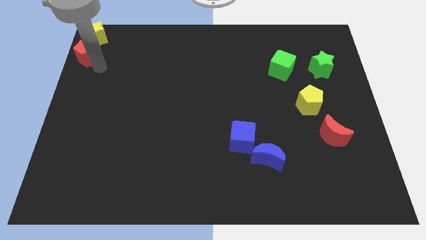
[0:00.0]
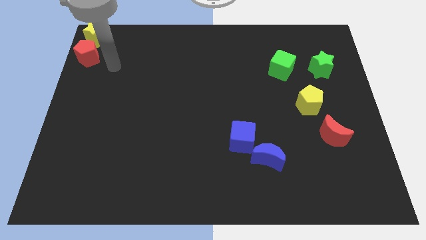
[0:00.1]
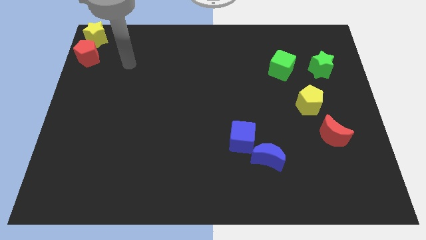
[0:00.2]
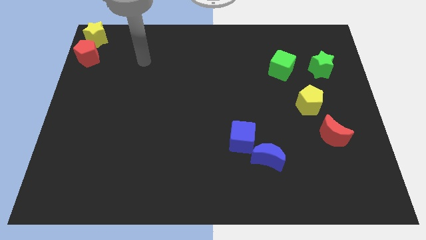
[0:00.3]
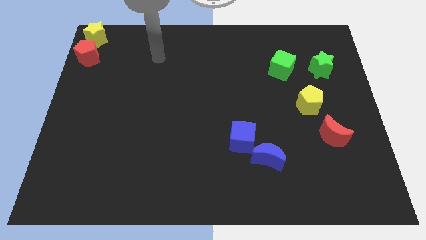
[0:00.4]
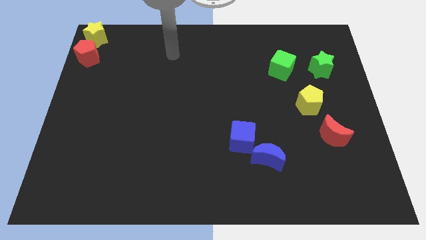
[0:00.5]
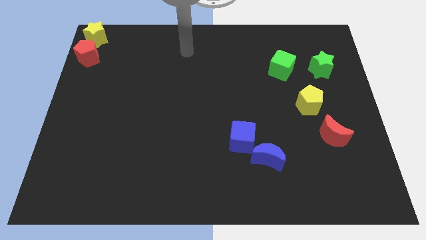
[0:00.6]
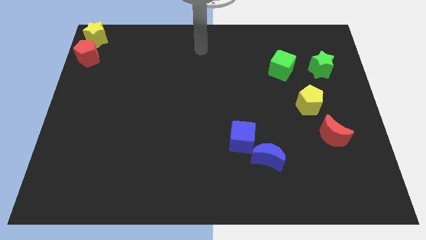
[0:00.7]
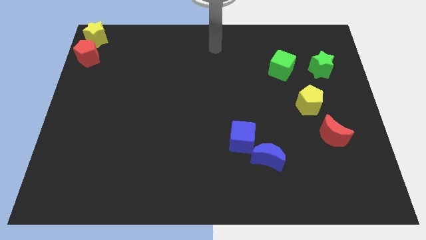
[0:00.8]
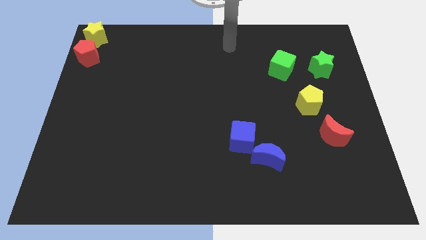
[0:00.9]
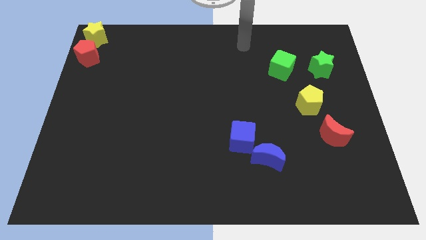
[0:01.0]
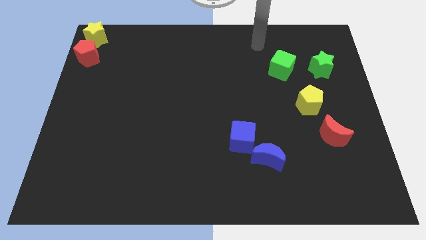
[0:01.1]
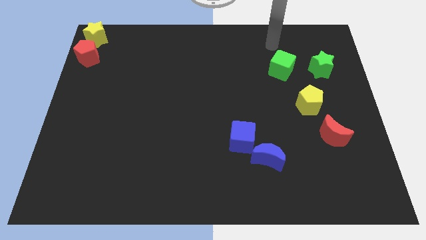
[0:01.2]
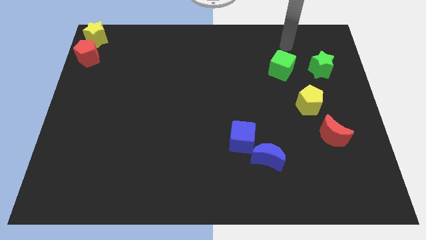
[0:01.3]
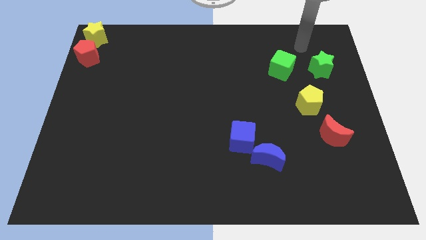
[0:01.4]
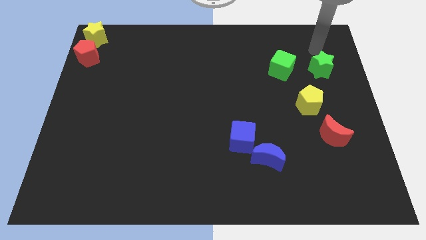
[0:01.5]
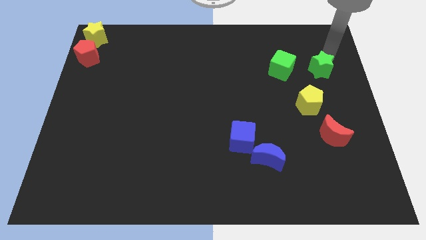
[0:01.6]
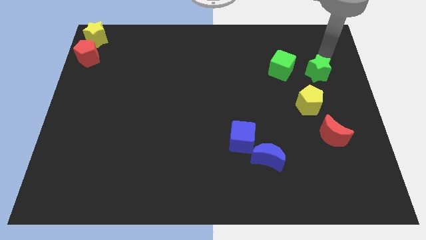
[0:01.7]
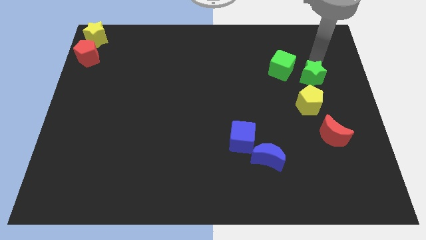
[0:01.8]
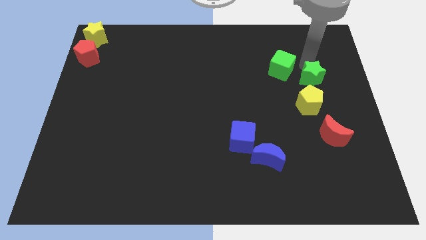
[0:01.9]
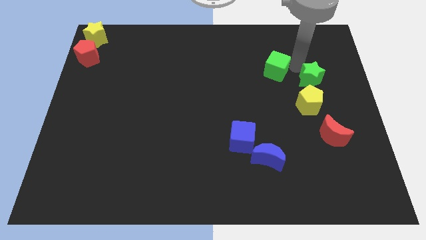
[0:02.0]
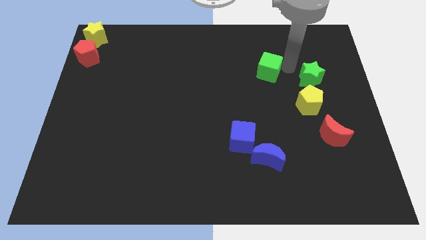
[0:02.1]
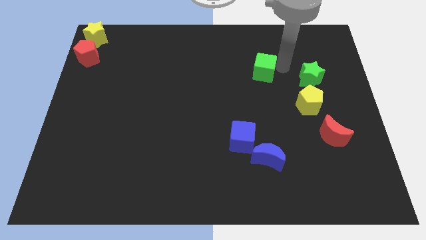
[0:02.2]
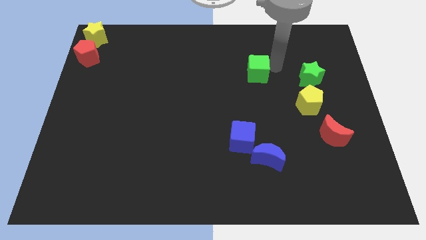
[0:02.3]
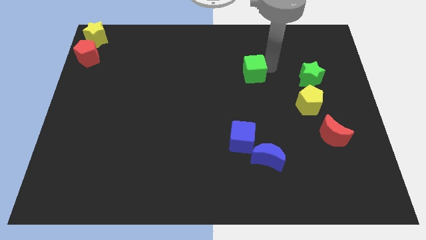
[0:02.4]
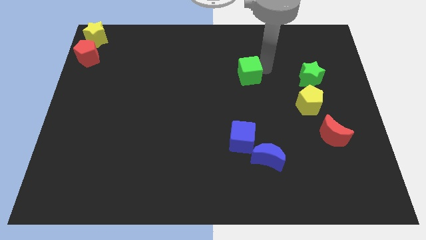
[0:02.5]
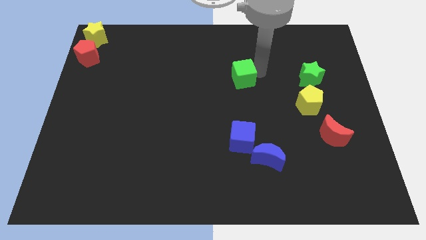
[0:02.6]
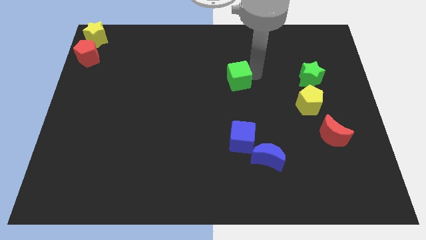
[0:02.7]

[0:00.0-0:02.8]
make the green blocks parallel to each other

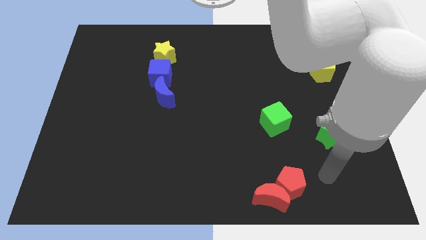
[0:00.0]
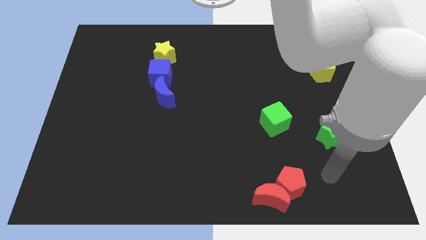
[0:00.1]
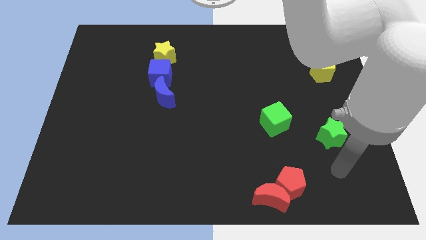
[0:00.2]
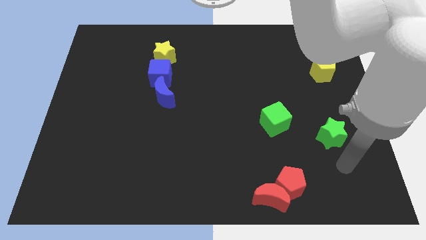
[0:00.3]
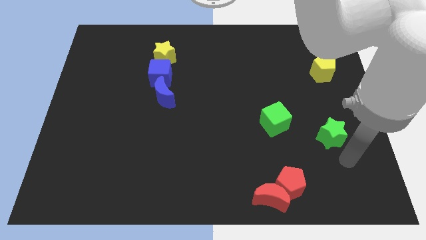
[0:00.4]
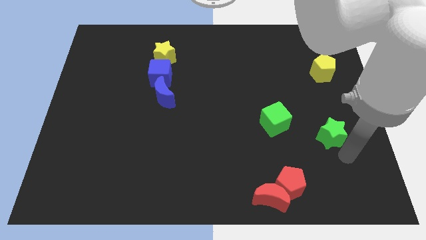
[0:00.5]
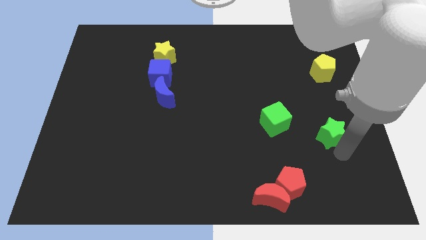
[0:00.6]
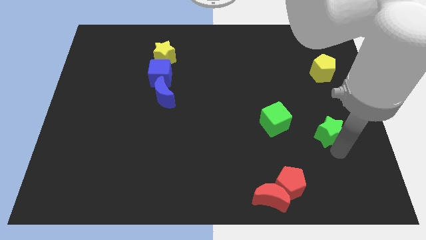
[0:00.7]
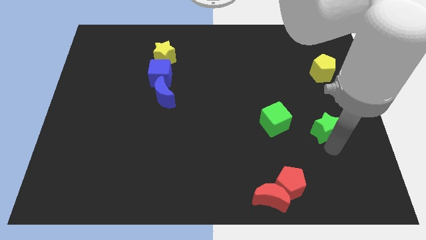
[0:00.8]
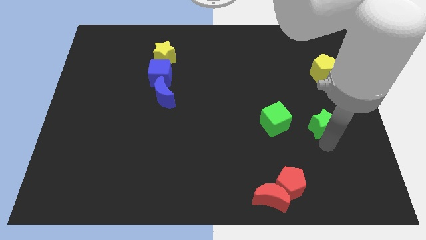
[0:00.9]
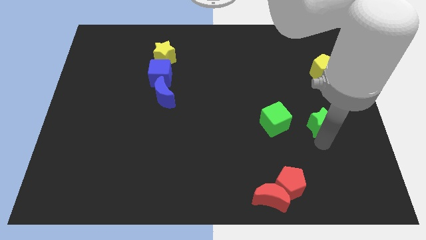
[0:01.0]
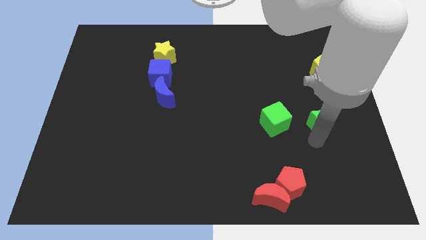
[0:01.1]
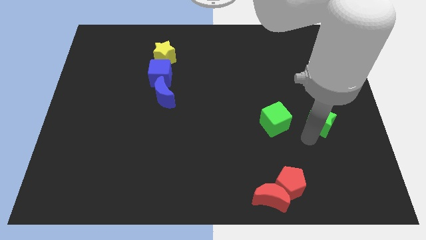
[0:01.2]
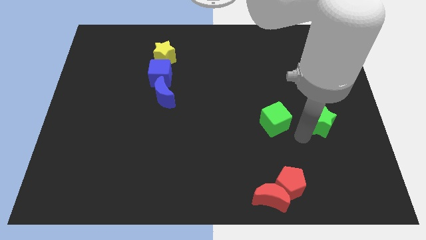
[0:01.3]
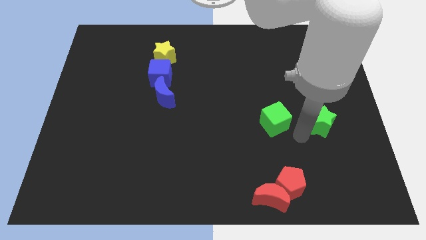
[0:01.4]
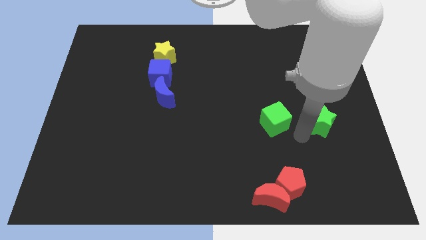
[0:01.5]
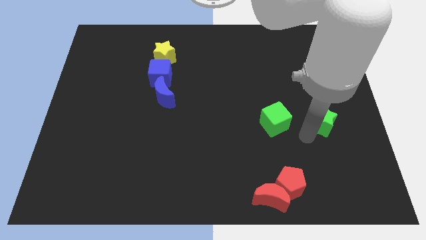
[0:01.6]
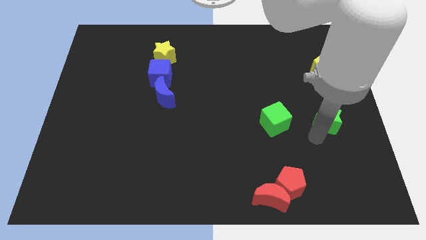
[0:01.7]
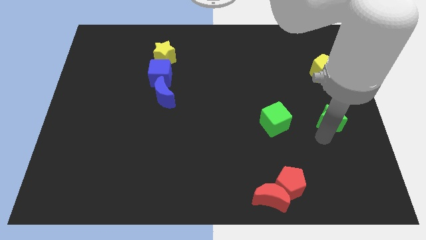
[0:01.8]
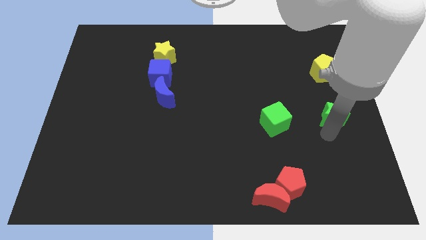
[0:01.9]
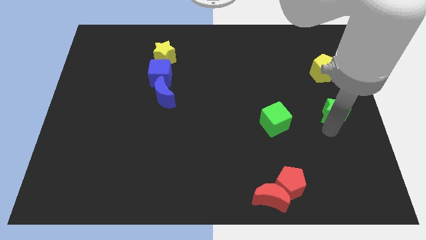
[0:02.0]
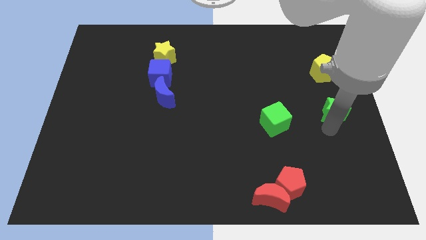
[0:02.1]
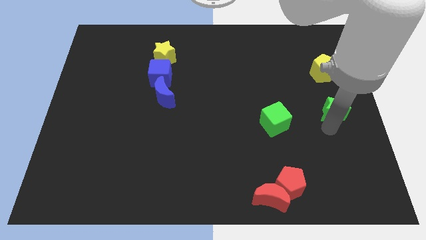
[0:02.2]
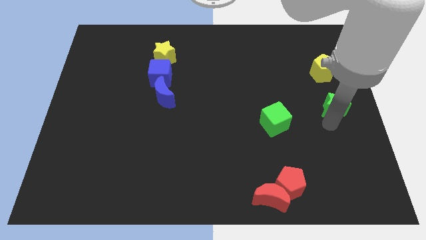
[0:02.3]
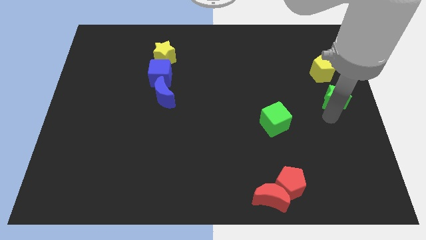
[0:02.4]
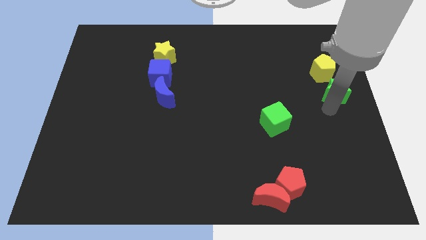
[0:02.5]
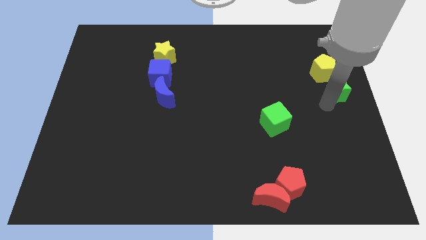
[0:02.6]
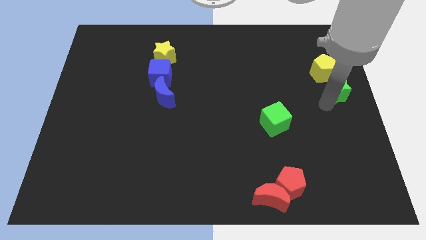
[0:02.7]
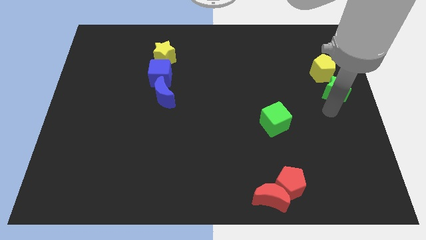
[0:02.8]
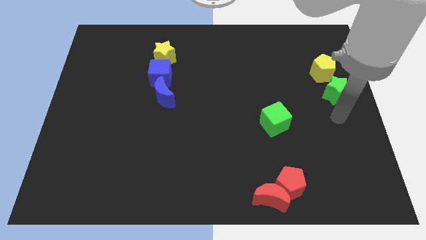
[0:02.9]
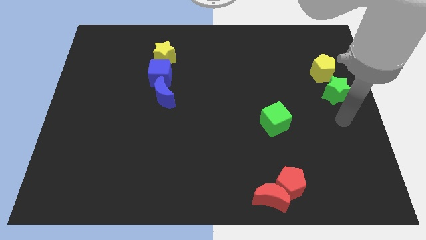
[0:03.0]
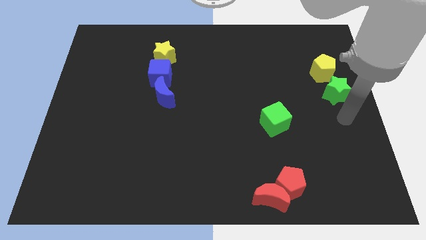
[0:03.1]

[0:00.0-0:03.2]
place green star to the bottom of yellow pentagon

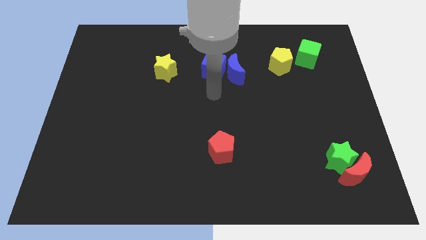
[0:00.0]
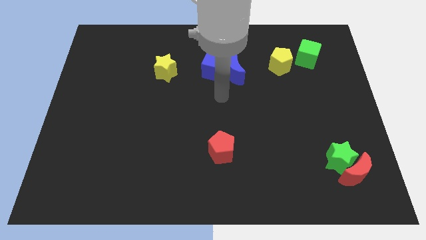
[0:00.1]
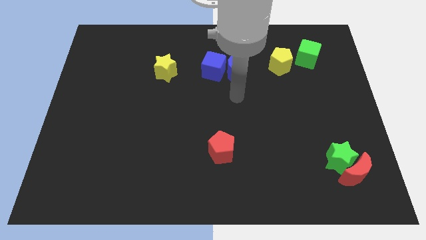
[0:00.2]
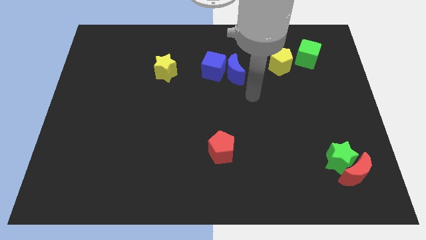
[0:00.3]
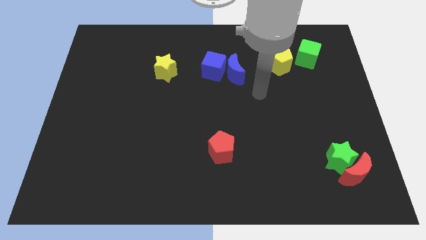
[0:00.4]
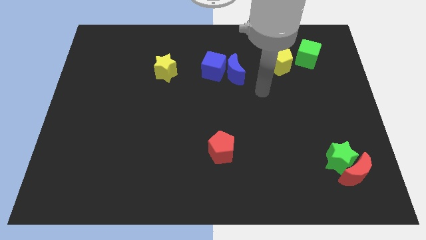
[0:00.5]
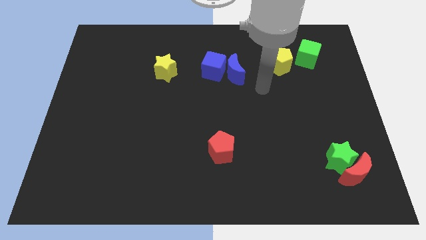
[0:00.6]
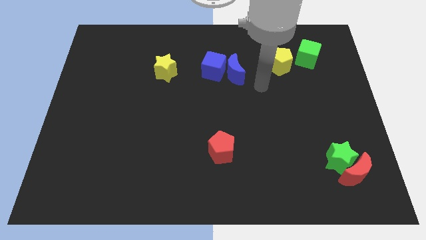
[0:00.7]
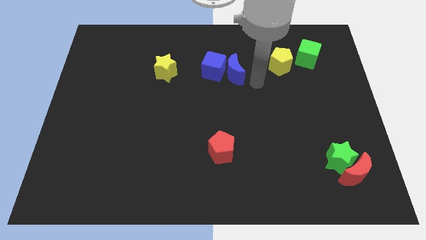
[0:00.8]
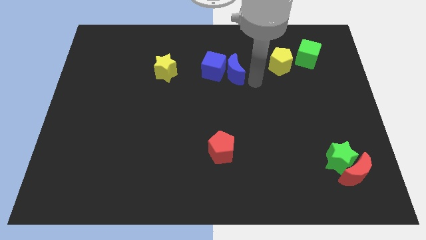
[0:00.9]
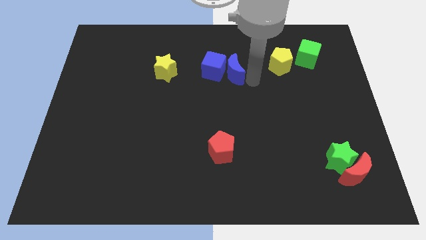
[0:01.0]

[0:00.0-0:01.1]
point your arm at the right of the blue crescent

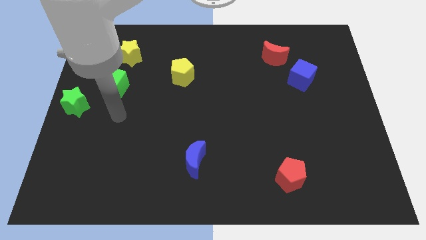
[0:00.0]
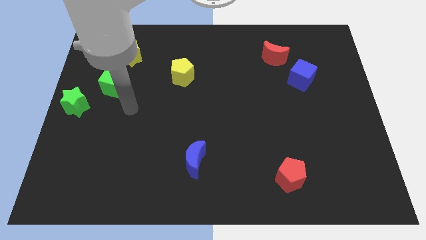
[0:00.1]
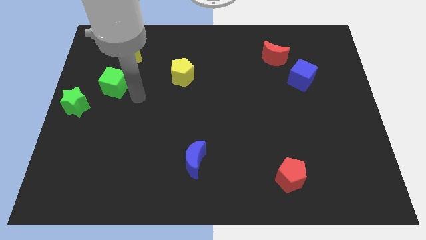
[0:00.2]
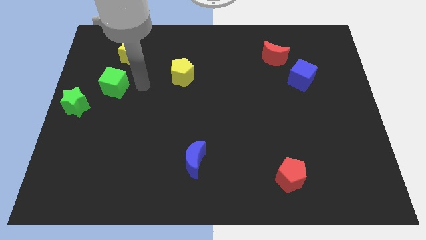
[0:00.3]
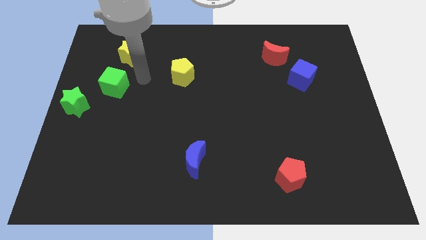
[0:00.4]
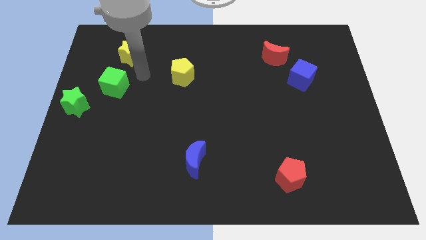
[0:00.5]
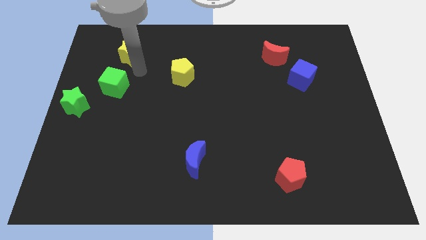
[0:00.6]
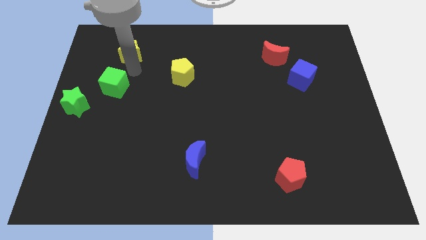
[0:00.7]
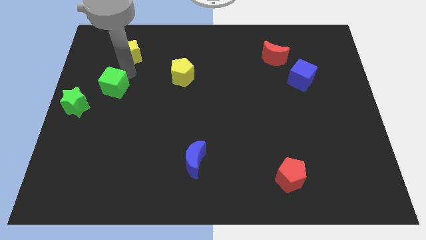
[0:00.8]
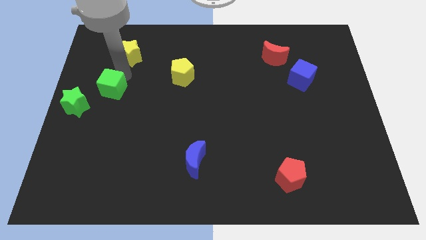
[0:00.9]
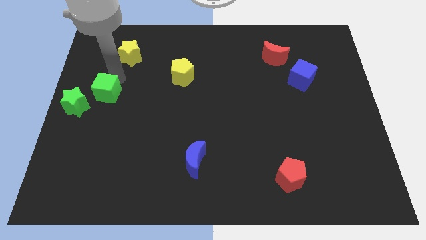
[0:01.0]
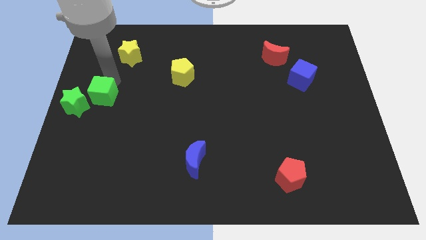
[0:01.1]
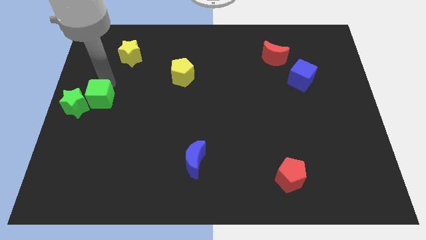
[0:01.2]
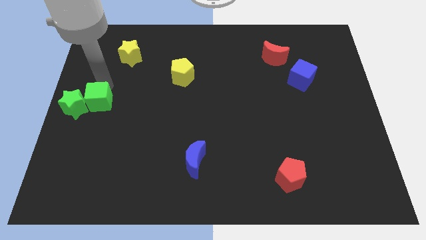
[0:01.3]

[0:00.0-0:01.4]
push the green cube into green star

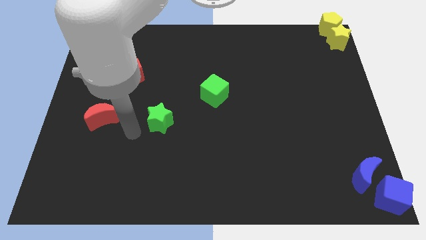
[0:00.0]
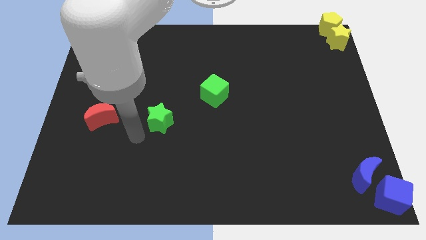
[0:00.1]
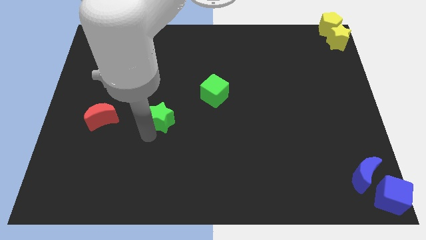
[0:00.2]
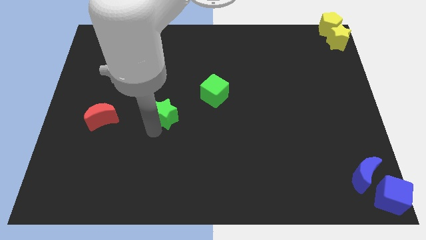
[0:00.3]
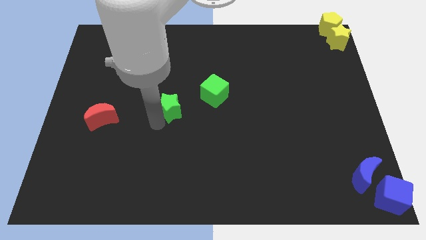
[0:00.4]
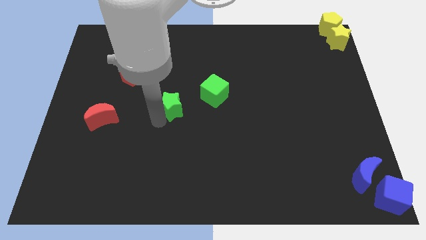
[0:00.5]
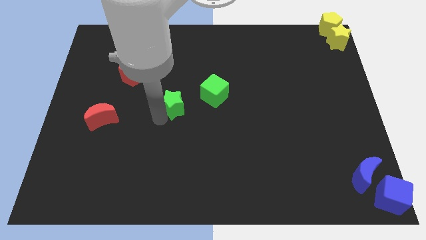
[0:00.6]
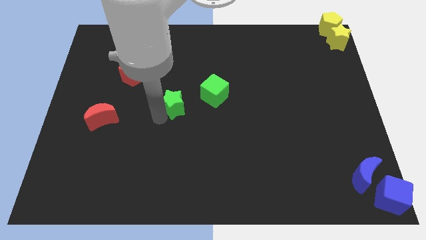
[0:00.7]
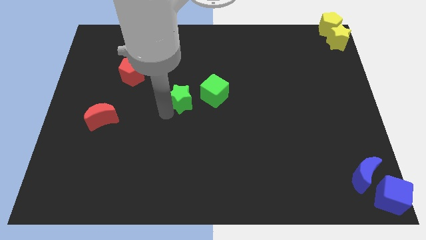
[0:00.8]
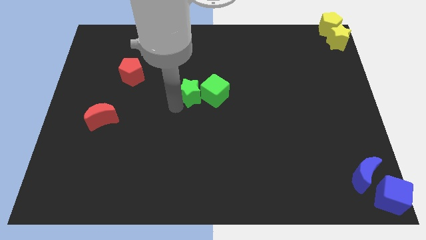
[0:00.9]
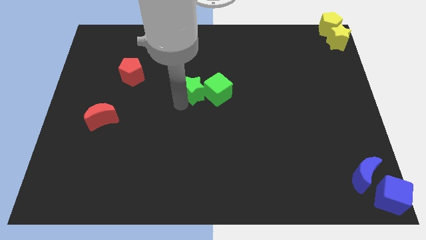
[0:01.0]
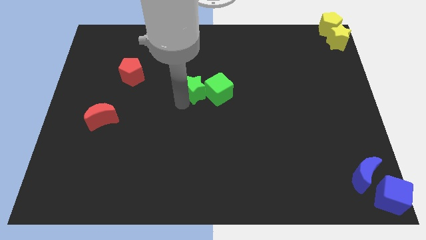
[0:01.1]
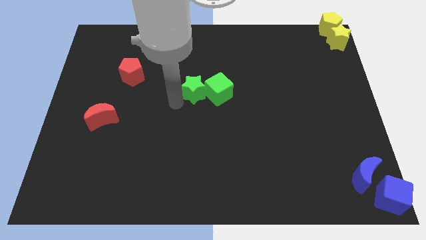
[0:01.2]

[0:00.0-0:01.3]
place green star to the left side of green cube
